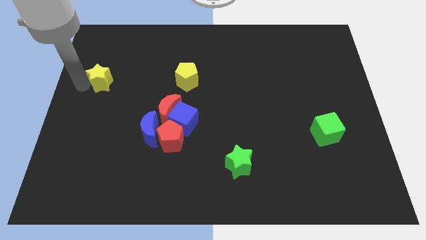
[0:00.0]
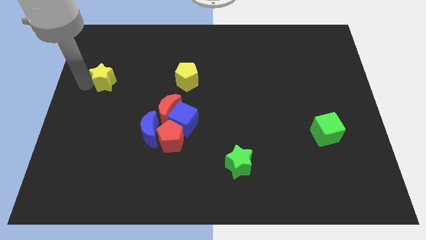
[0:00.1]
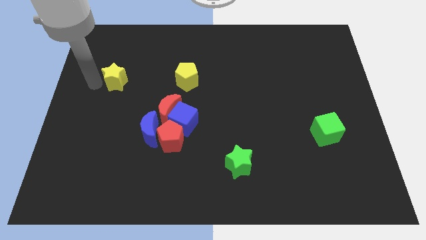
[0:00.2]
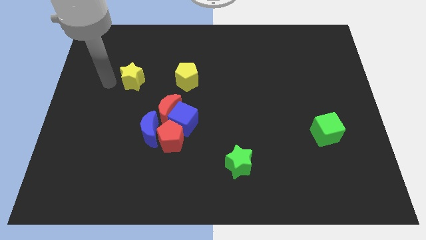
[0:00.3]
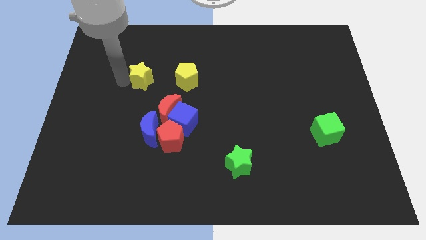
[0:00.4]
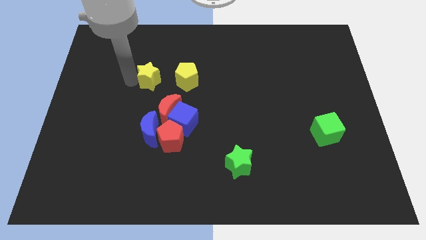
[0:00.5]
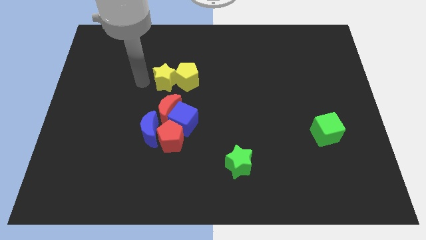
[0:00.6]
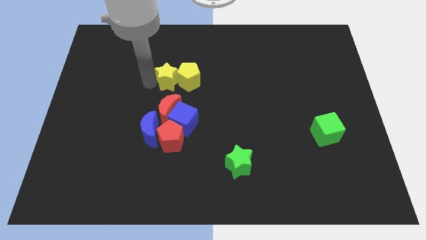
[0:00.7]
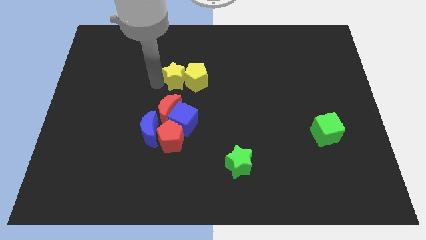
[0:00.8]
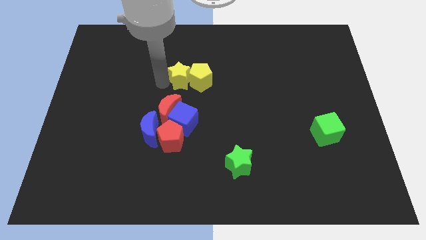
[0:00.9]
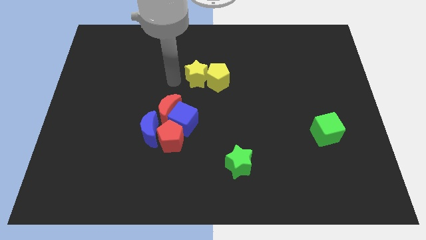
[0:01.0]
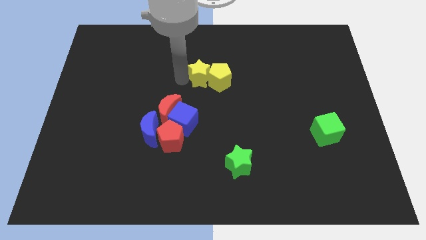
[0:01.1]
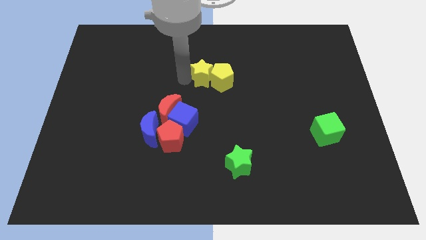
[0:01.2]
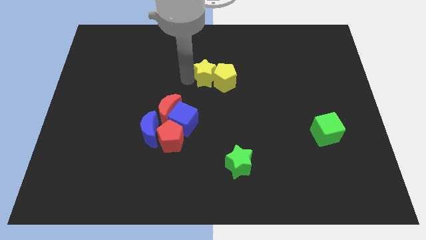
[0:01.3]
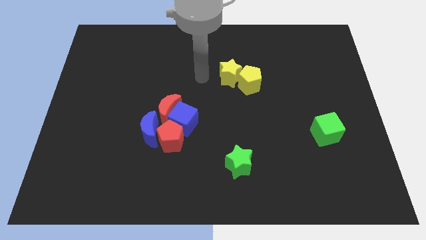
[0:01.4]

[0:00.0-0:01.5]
push the yellow pentagon with yellow star towards the center of the board

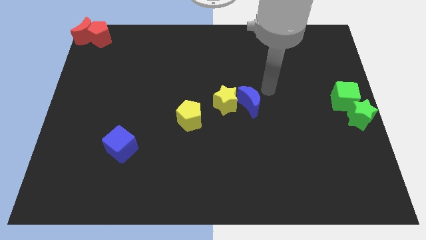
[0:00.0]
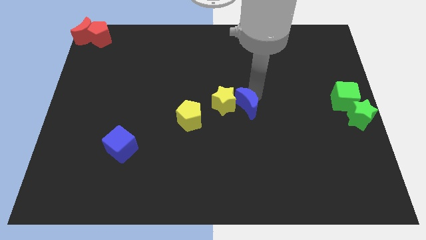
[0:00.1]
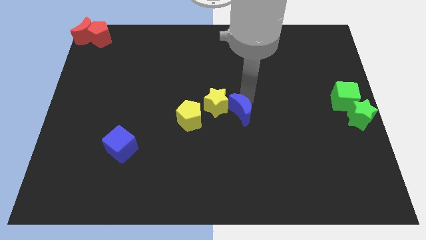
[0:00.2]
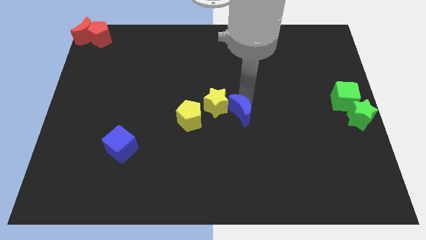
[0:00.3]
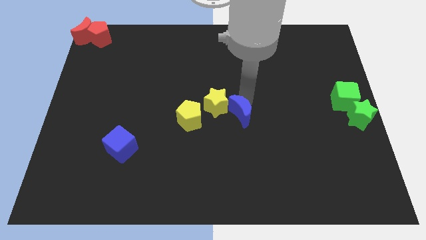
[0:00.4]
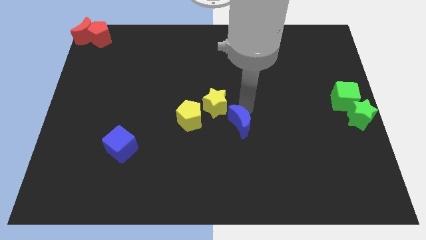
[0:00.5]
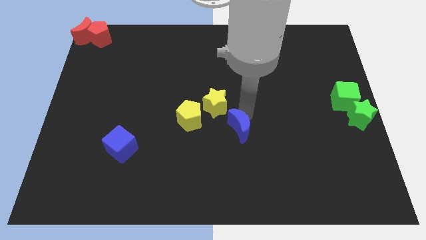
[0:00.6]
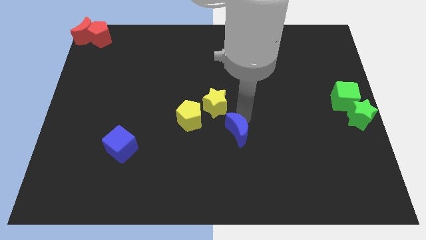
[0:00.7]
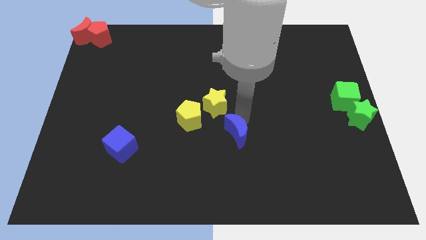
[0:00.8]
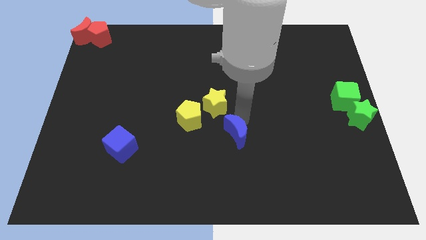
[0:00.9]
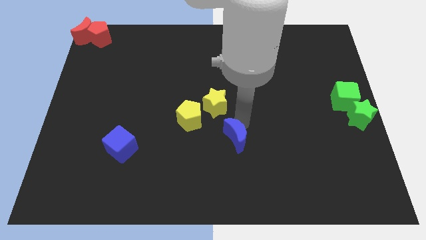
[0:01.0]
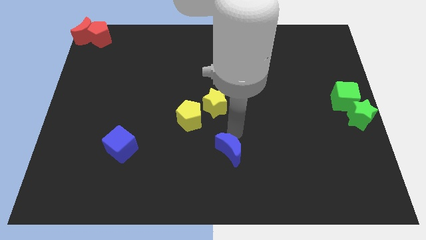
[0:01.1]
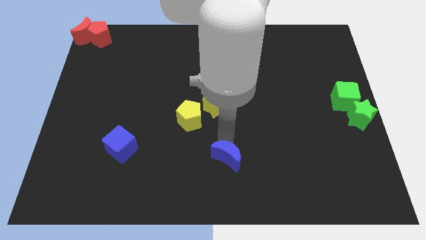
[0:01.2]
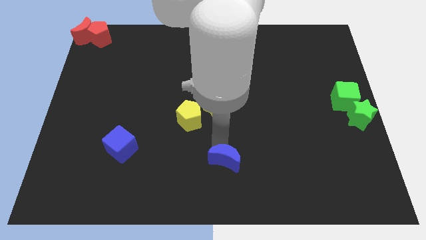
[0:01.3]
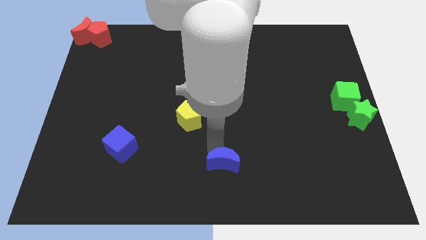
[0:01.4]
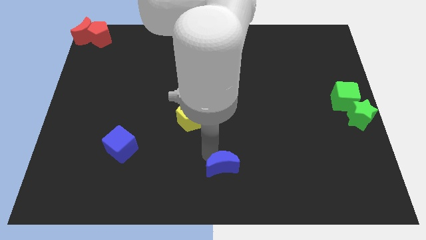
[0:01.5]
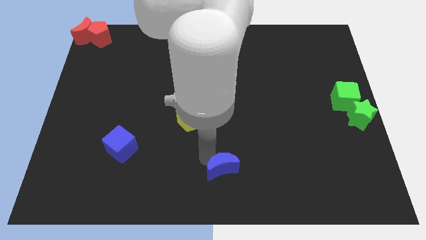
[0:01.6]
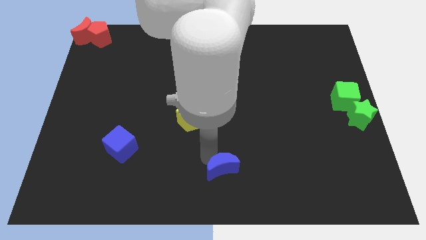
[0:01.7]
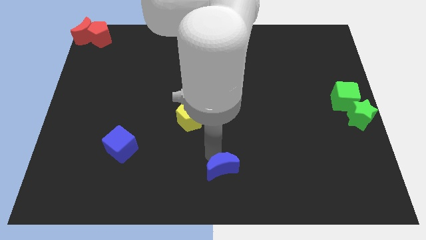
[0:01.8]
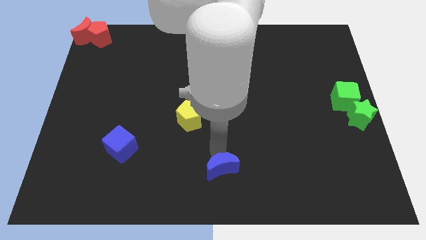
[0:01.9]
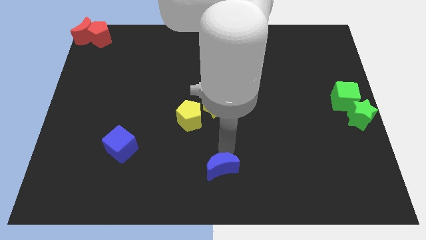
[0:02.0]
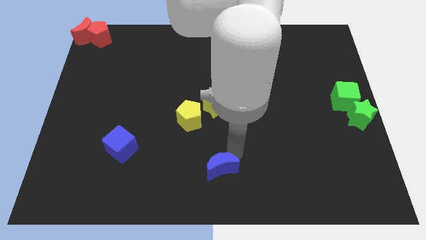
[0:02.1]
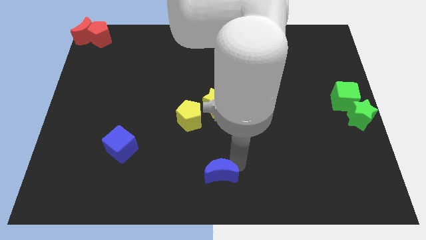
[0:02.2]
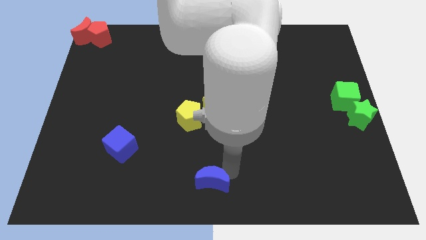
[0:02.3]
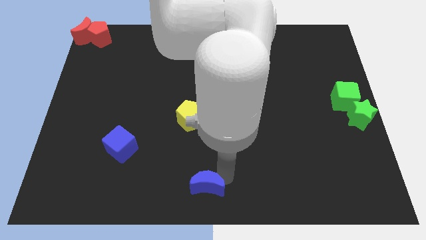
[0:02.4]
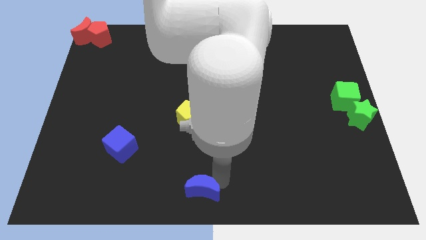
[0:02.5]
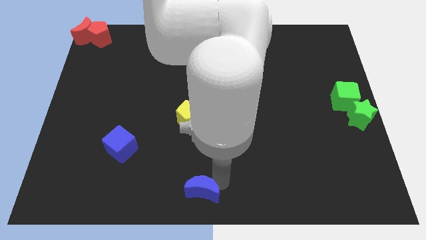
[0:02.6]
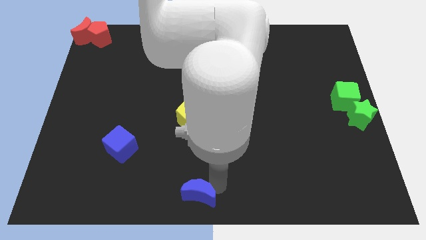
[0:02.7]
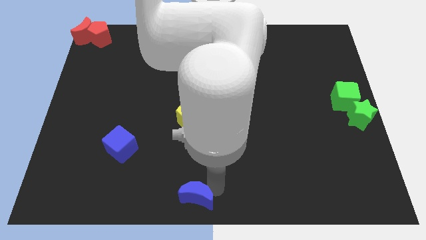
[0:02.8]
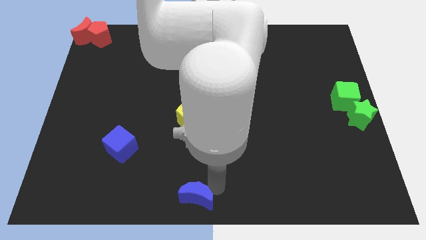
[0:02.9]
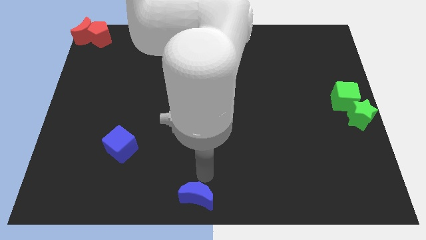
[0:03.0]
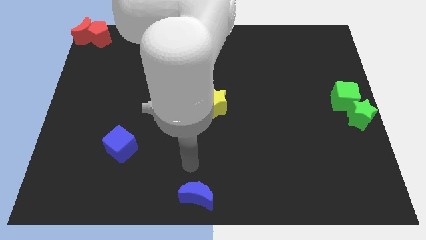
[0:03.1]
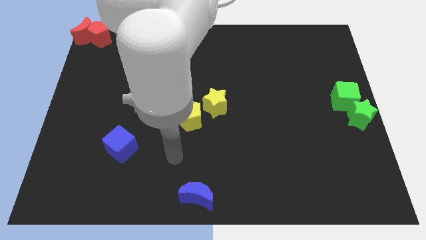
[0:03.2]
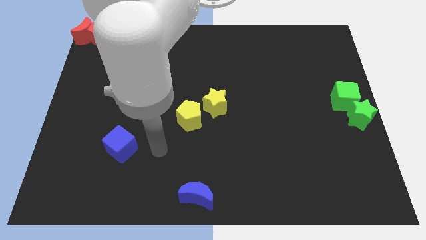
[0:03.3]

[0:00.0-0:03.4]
push the blue crescent to the bottom center of the board

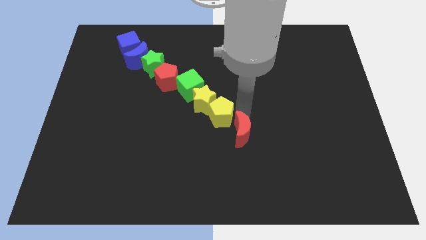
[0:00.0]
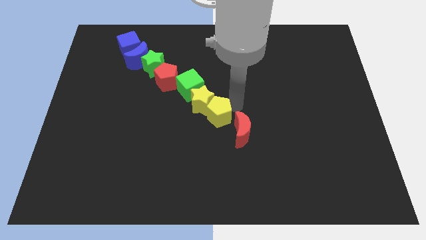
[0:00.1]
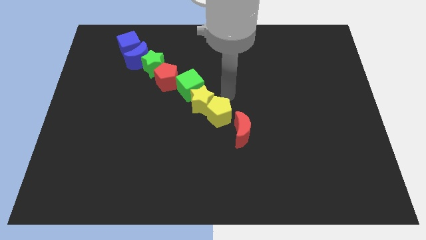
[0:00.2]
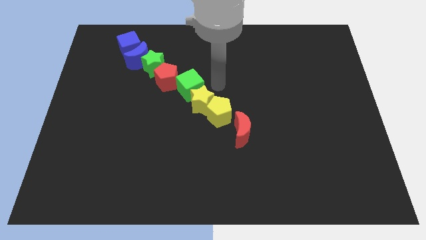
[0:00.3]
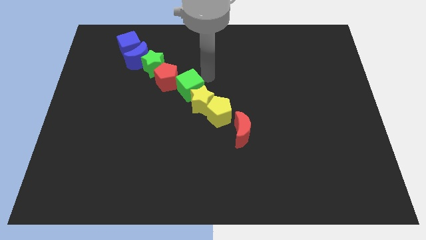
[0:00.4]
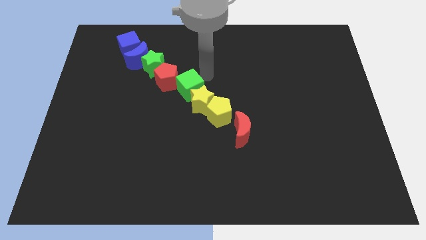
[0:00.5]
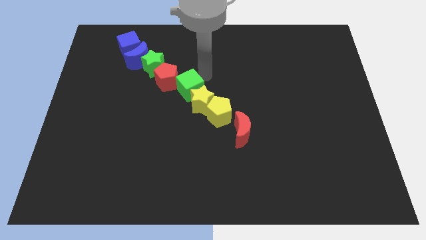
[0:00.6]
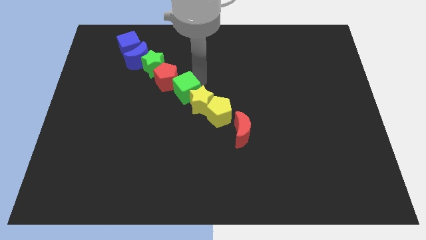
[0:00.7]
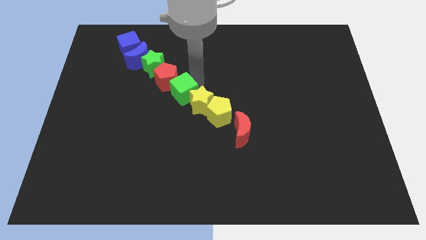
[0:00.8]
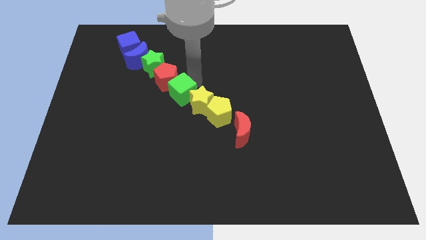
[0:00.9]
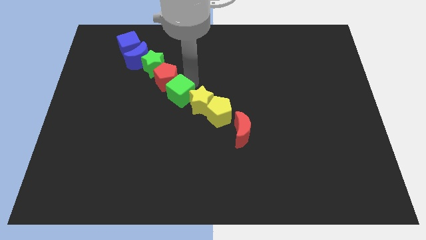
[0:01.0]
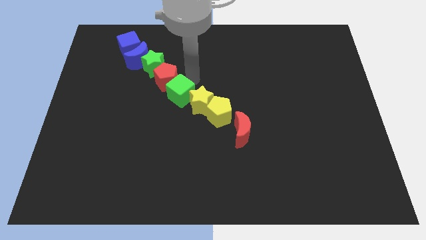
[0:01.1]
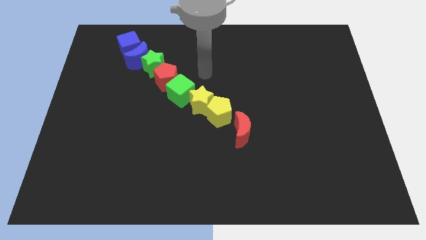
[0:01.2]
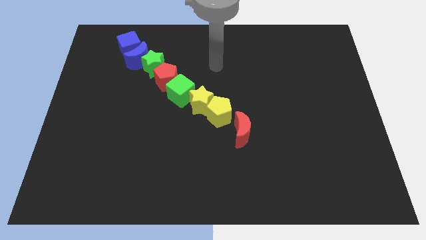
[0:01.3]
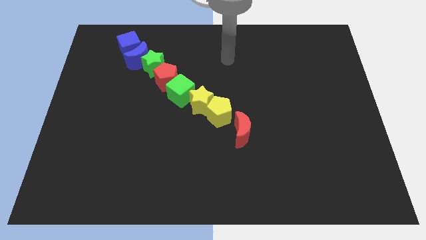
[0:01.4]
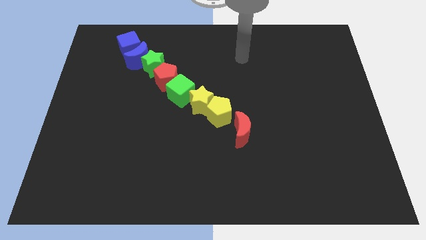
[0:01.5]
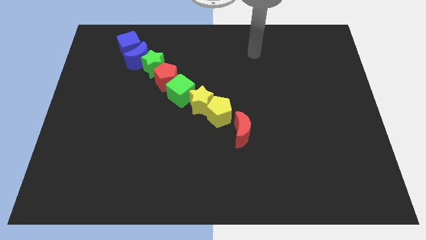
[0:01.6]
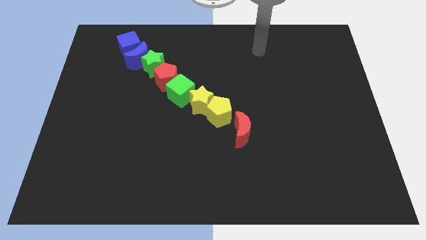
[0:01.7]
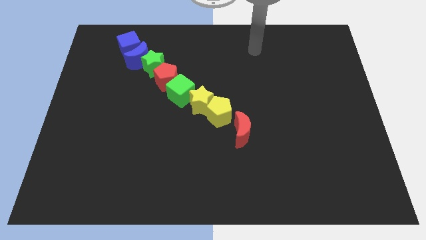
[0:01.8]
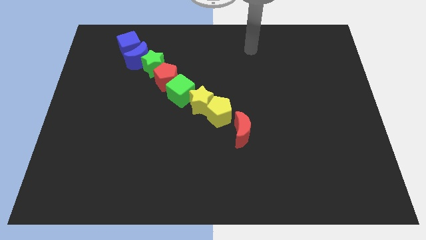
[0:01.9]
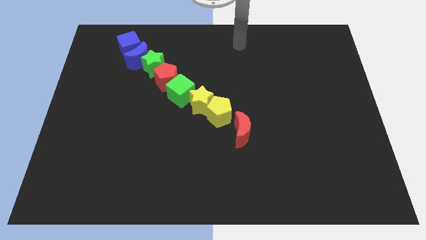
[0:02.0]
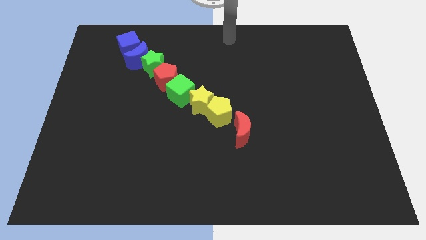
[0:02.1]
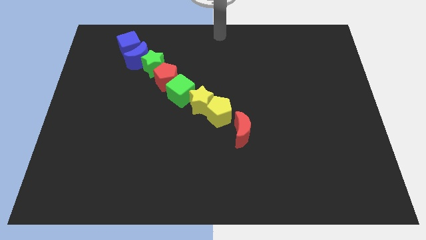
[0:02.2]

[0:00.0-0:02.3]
move your arm at the top center of the board

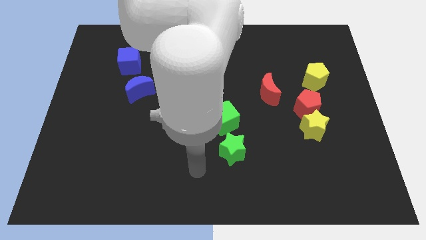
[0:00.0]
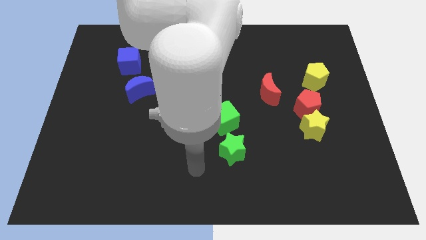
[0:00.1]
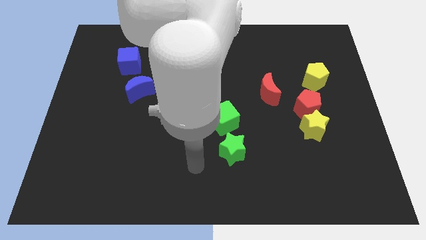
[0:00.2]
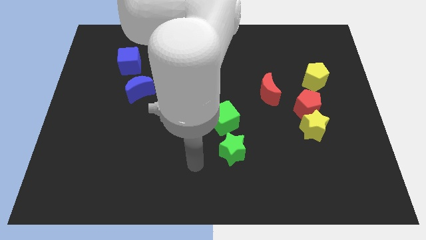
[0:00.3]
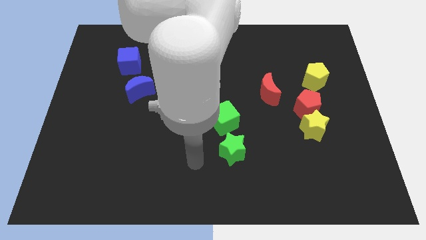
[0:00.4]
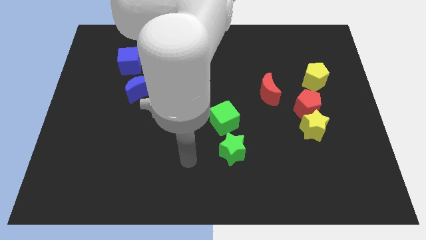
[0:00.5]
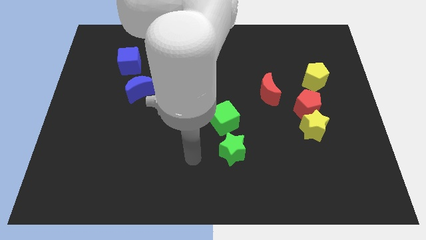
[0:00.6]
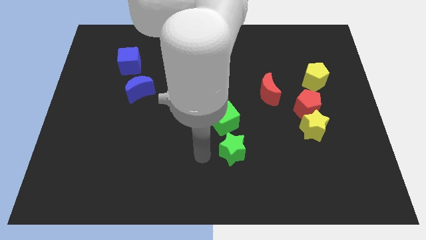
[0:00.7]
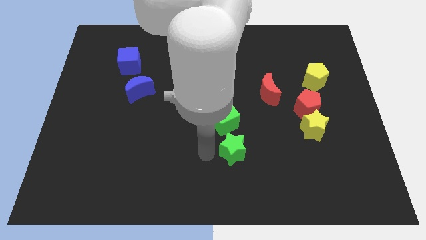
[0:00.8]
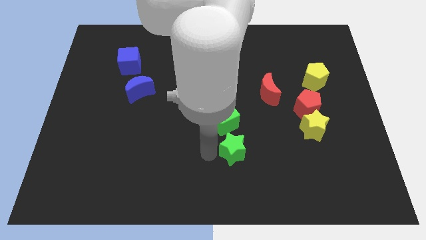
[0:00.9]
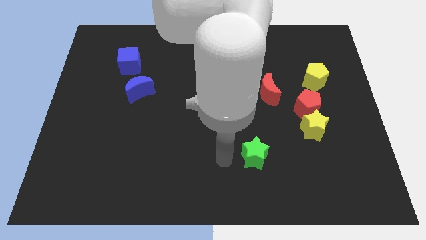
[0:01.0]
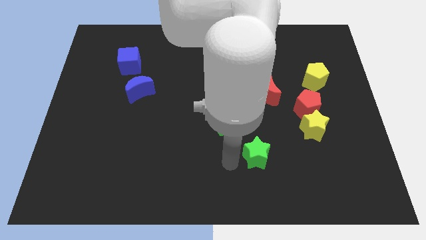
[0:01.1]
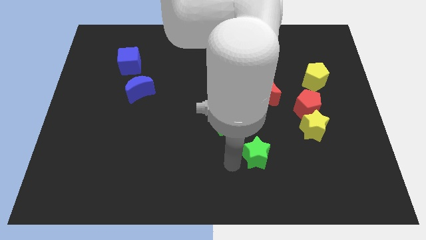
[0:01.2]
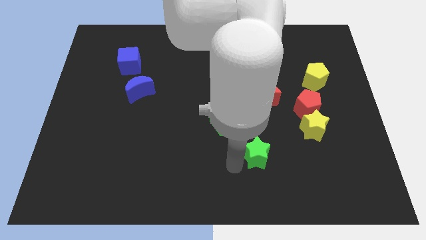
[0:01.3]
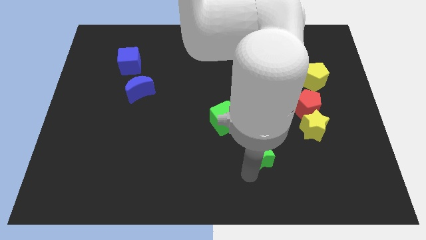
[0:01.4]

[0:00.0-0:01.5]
tap the green star

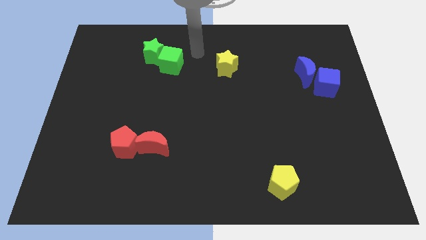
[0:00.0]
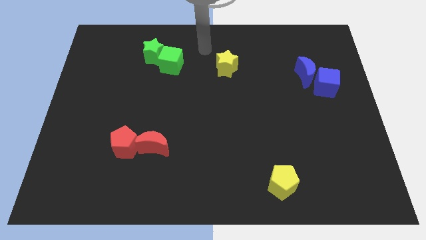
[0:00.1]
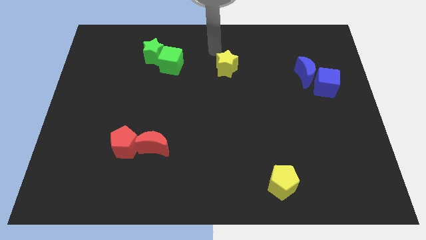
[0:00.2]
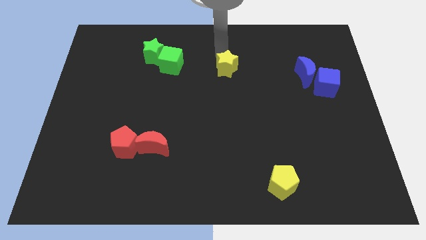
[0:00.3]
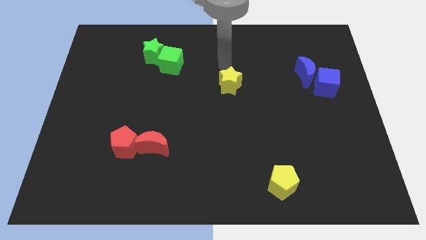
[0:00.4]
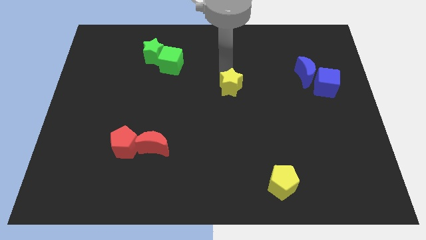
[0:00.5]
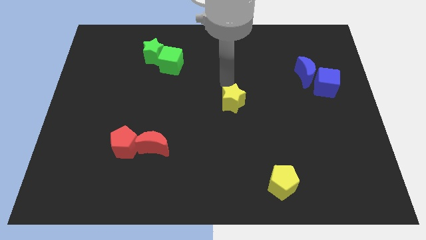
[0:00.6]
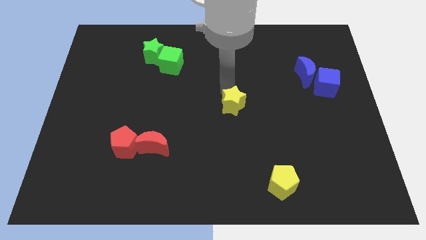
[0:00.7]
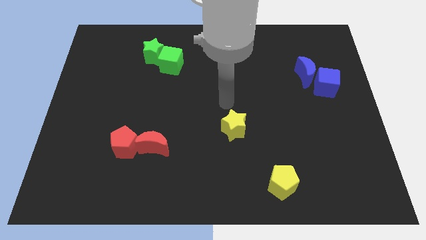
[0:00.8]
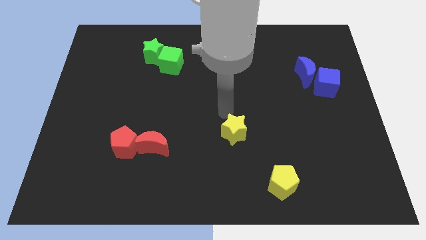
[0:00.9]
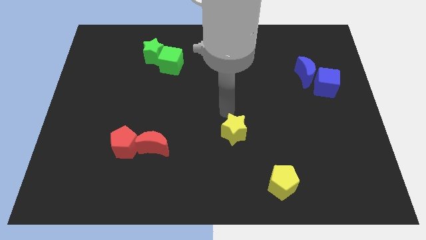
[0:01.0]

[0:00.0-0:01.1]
move yellow star diagonal to the yellow pentagon
